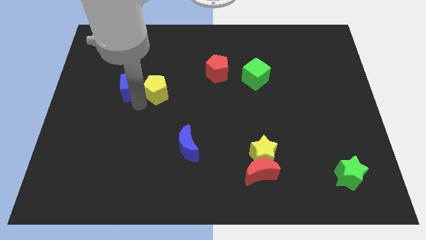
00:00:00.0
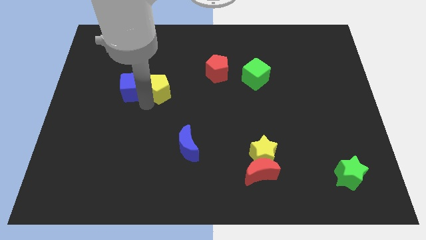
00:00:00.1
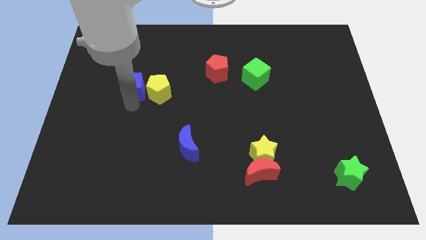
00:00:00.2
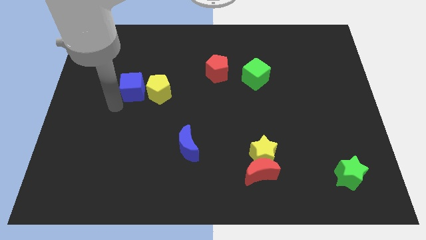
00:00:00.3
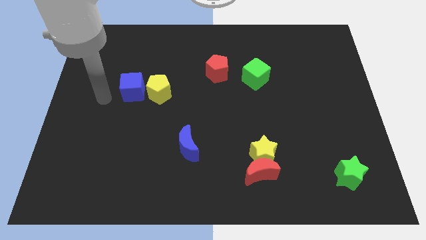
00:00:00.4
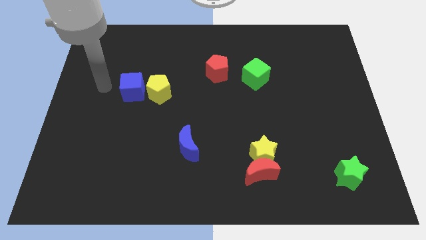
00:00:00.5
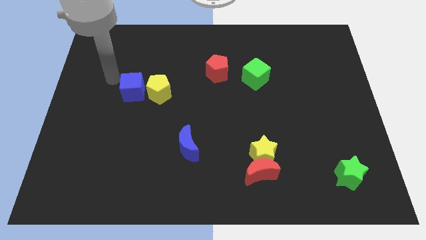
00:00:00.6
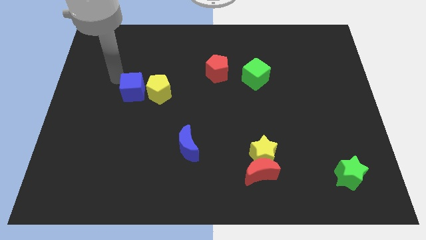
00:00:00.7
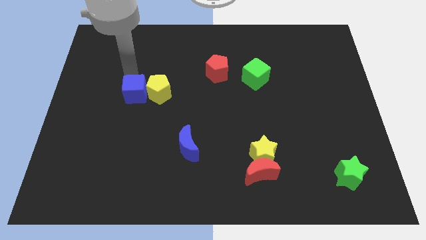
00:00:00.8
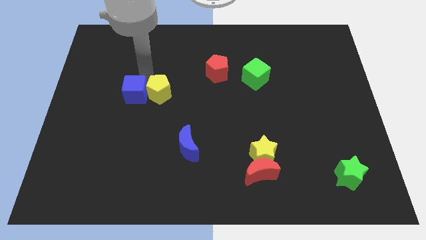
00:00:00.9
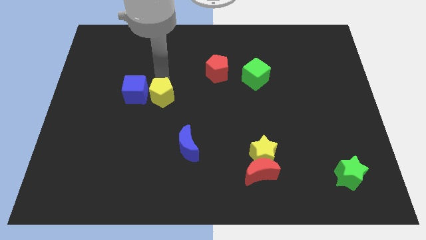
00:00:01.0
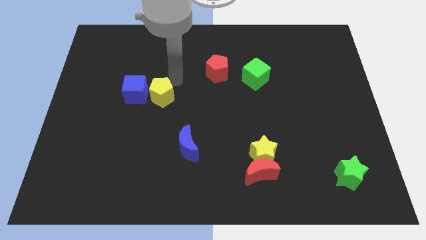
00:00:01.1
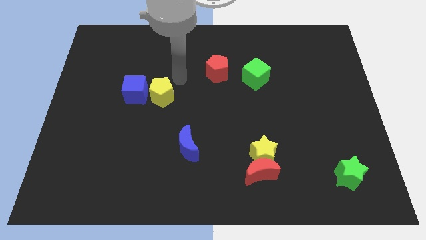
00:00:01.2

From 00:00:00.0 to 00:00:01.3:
slightly move the cube down towards the bottom center

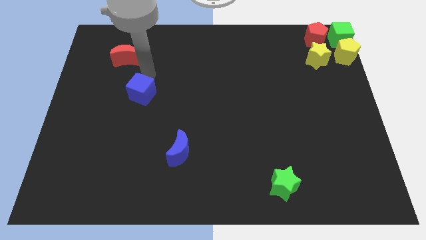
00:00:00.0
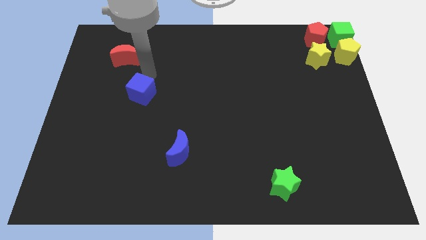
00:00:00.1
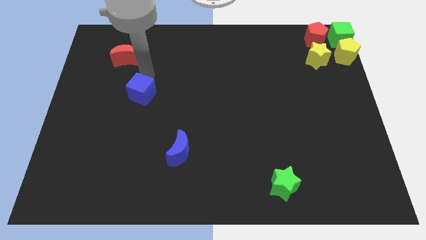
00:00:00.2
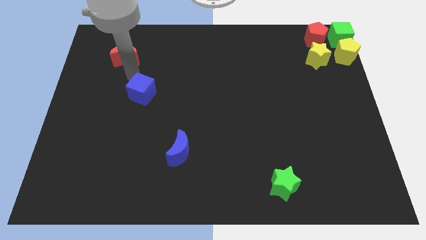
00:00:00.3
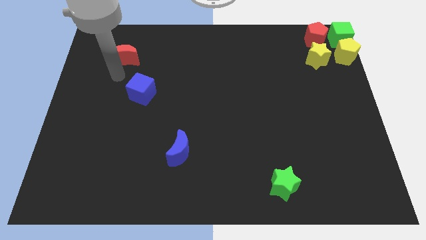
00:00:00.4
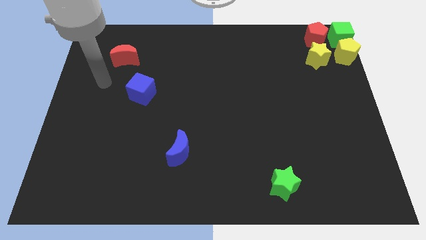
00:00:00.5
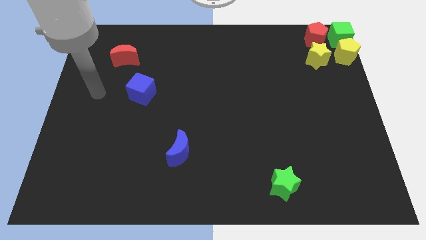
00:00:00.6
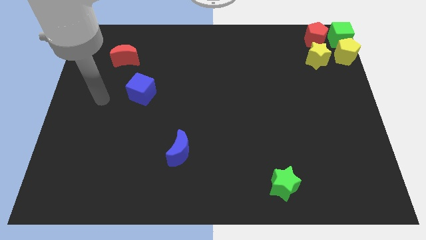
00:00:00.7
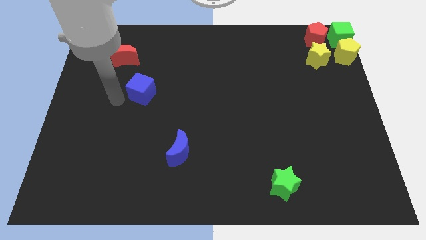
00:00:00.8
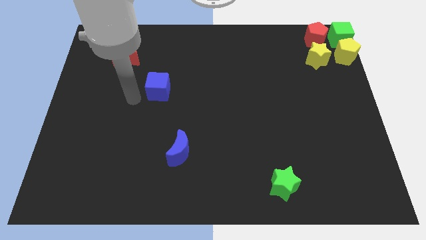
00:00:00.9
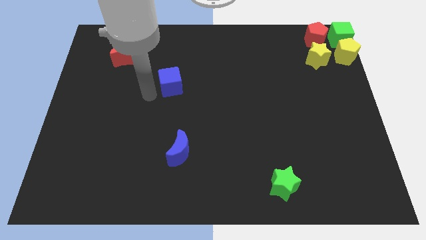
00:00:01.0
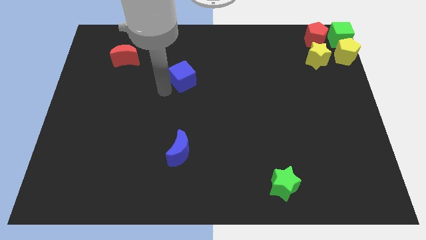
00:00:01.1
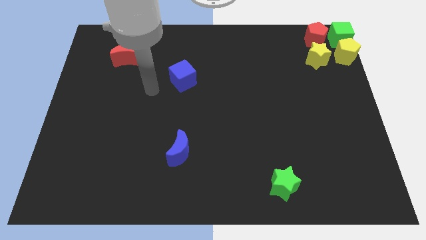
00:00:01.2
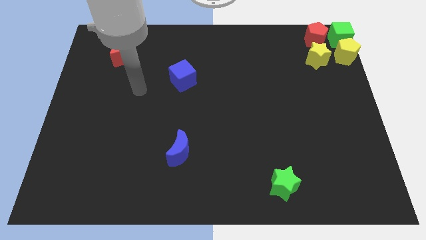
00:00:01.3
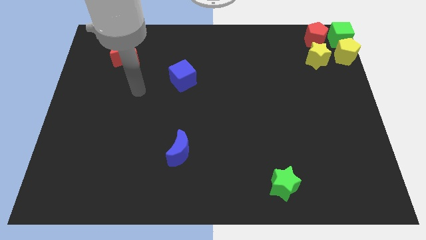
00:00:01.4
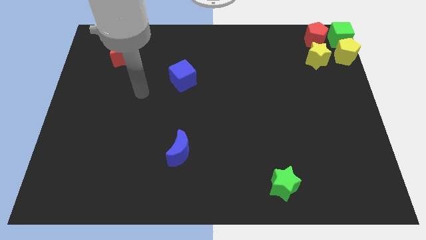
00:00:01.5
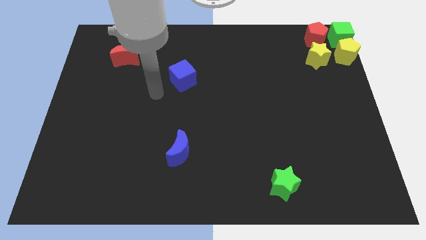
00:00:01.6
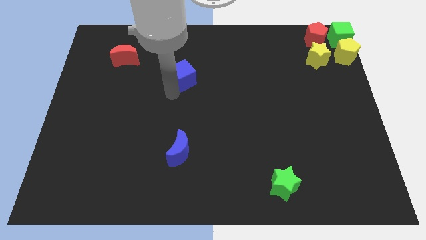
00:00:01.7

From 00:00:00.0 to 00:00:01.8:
move the blue cube slightly up

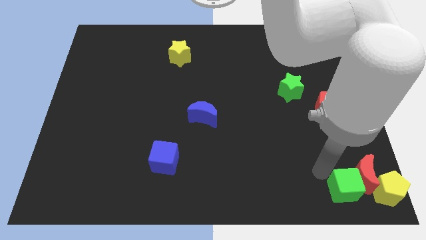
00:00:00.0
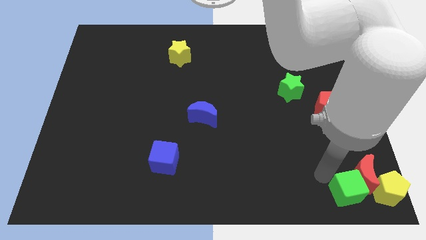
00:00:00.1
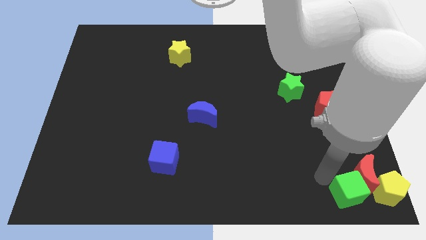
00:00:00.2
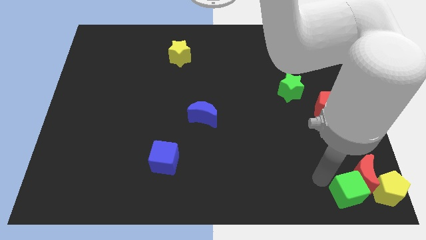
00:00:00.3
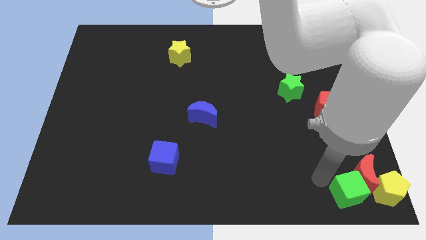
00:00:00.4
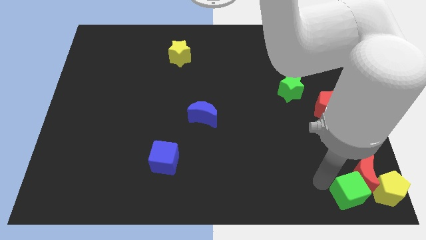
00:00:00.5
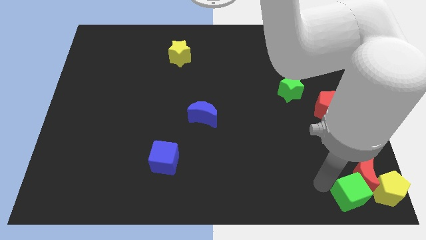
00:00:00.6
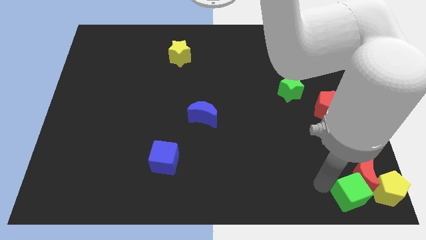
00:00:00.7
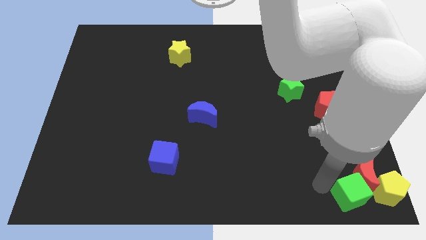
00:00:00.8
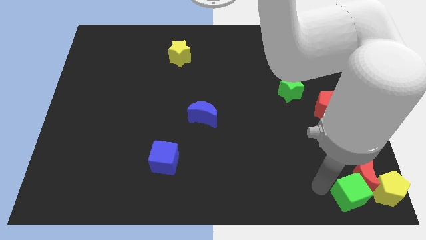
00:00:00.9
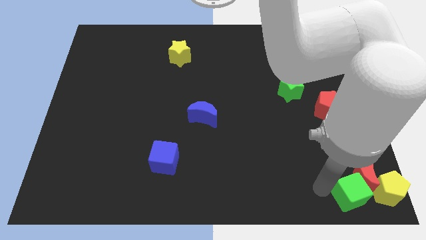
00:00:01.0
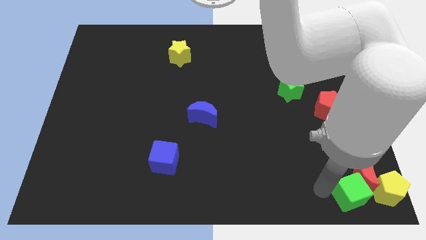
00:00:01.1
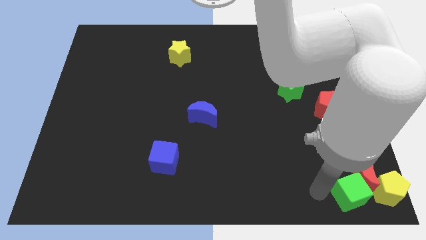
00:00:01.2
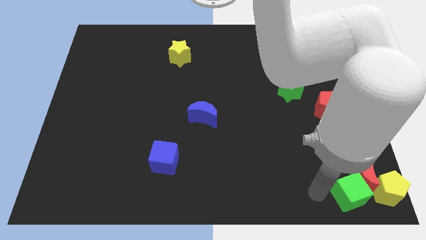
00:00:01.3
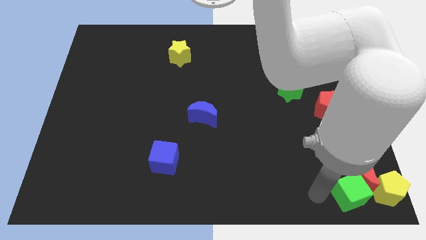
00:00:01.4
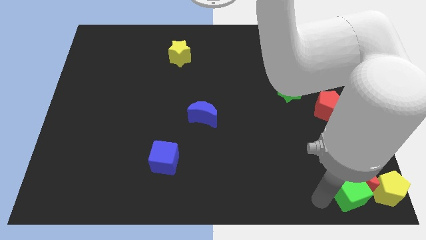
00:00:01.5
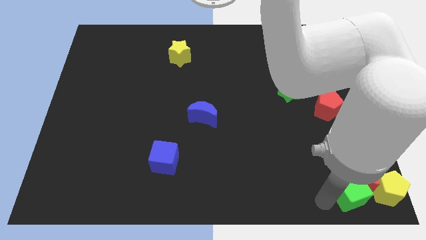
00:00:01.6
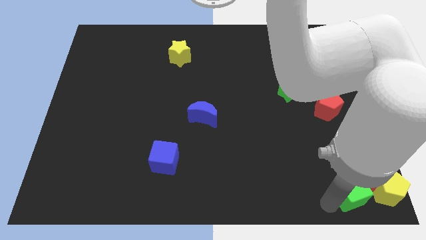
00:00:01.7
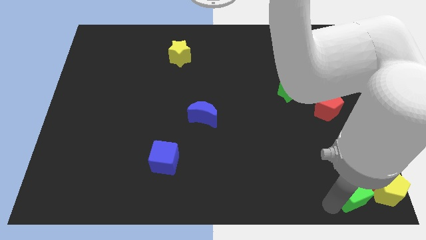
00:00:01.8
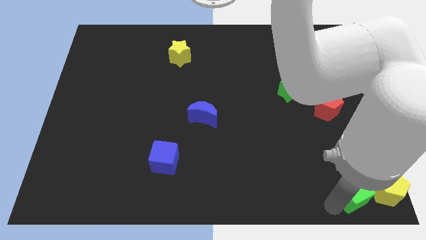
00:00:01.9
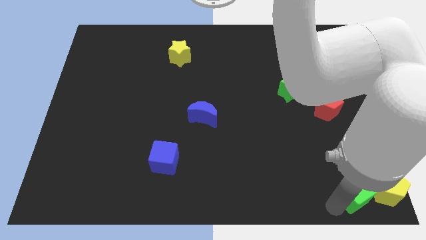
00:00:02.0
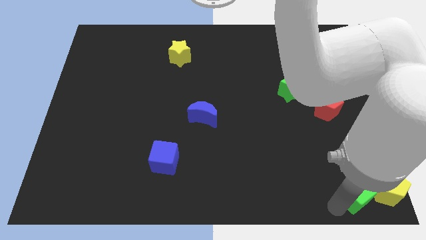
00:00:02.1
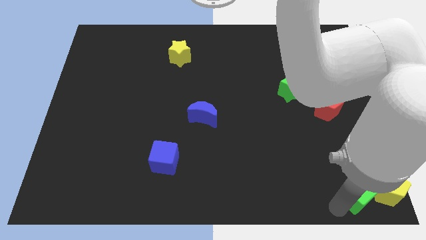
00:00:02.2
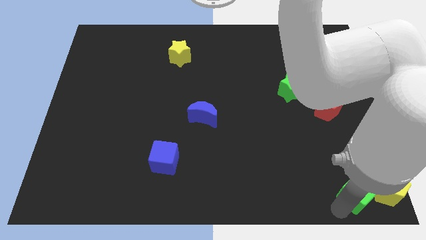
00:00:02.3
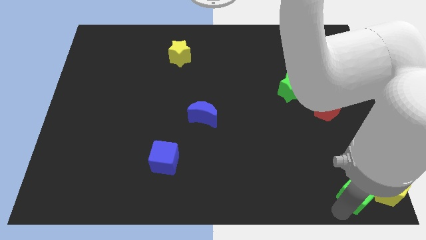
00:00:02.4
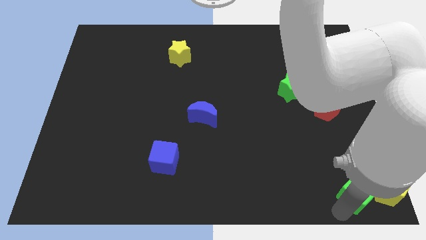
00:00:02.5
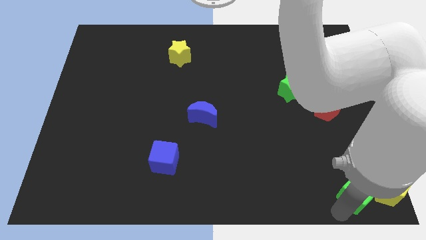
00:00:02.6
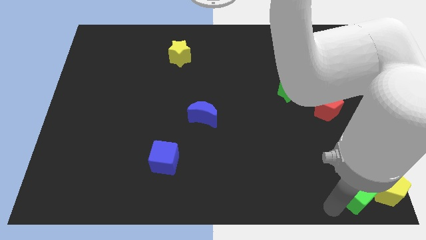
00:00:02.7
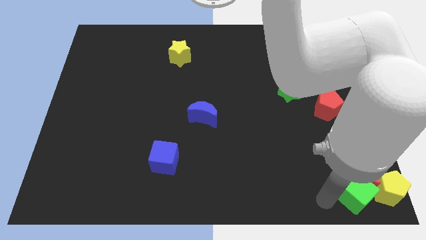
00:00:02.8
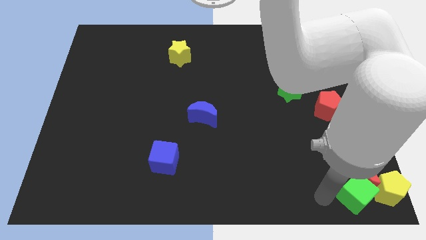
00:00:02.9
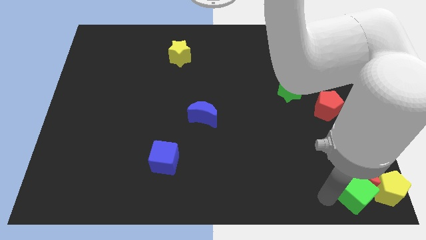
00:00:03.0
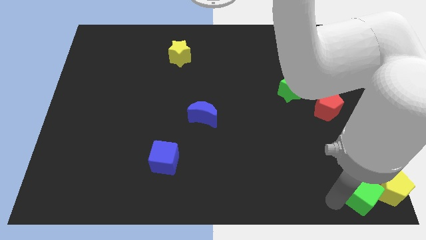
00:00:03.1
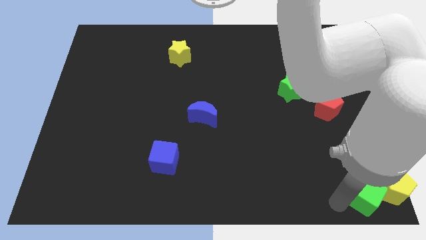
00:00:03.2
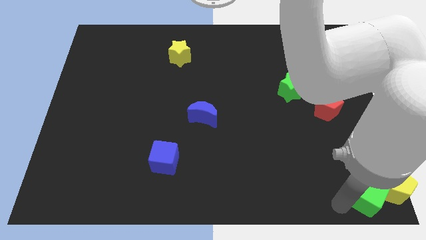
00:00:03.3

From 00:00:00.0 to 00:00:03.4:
push the green cube into the red crescent

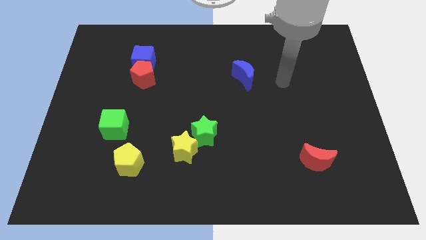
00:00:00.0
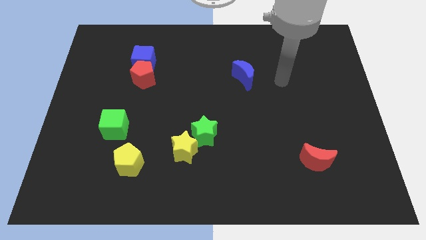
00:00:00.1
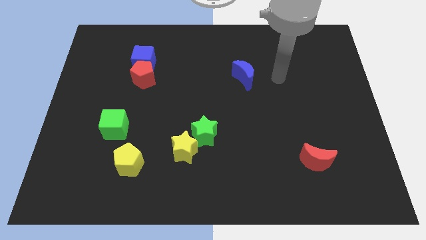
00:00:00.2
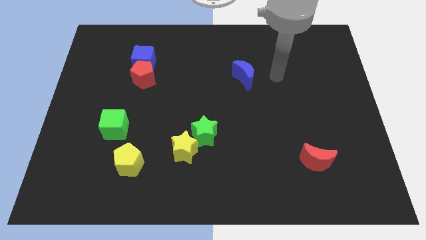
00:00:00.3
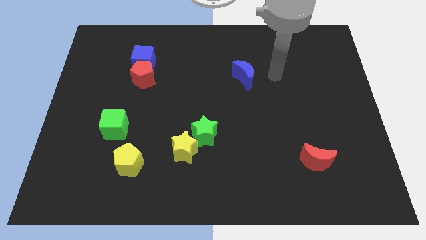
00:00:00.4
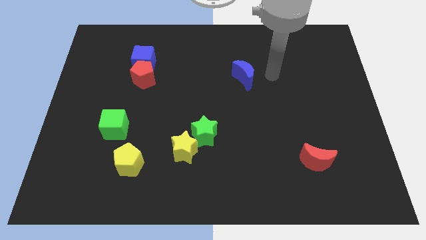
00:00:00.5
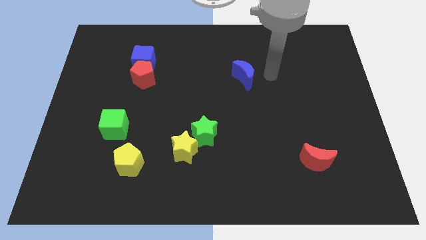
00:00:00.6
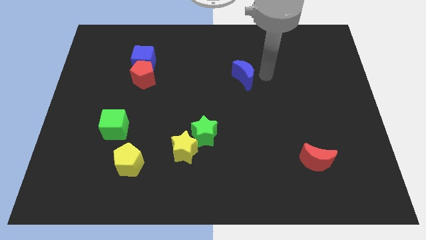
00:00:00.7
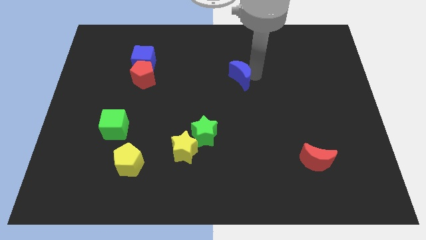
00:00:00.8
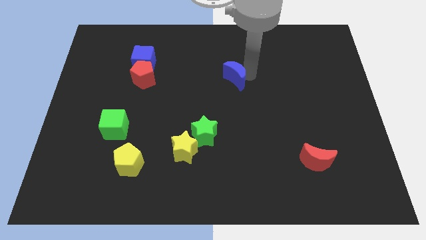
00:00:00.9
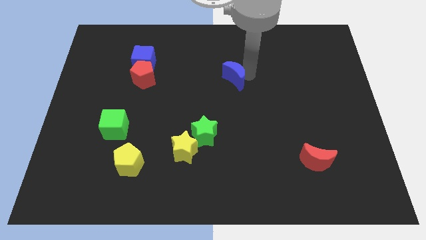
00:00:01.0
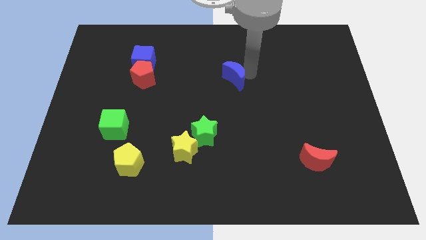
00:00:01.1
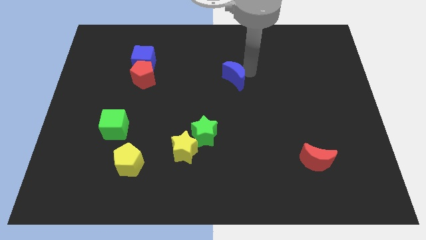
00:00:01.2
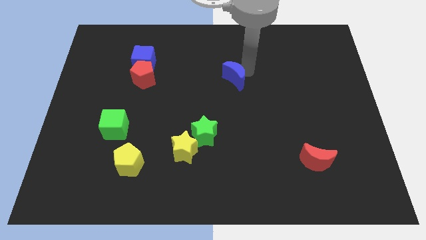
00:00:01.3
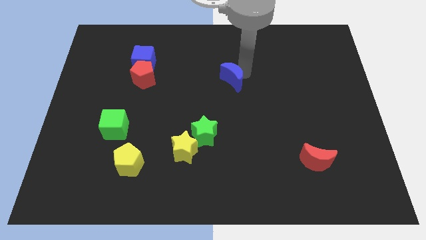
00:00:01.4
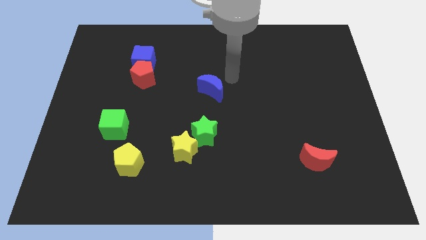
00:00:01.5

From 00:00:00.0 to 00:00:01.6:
push blue moon to the center

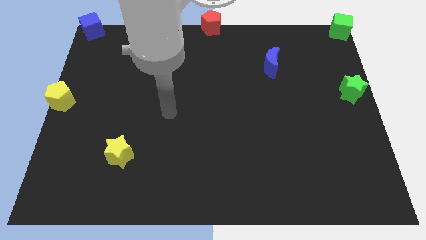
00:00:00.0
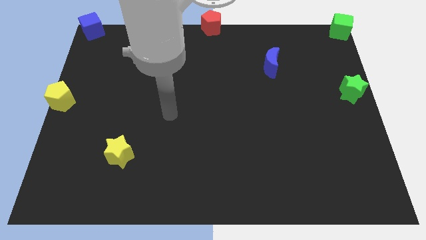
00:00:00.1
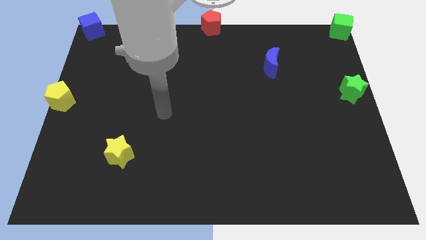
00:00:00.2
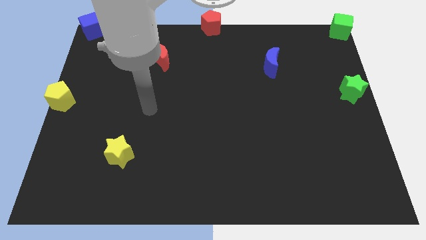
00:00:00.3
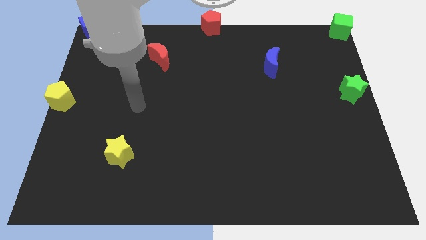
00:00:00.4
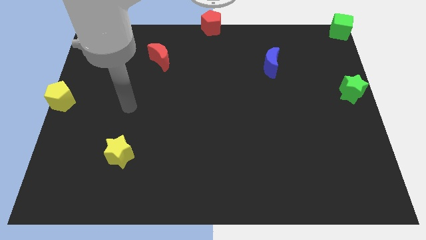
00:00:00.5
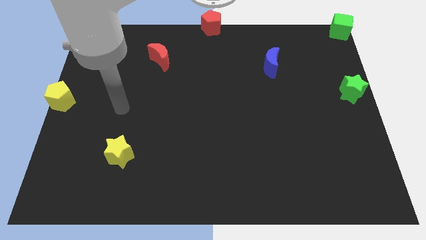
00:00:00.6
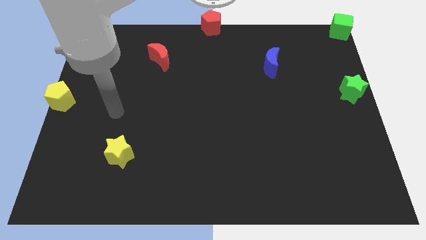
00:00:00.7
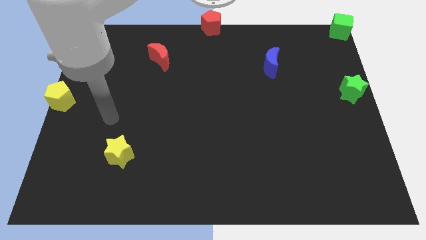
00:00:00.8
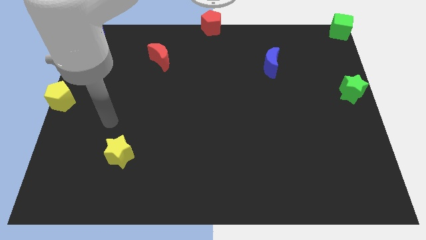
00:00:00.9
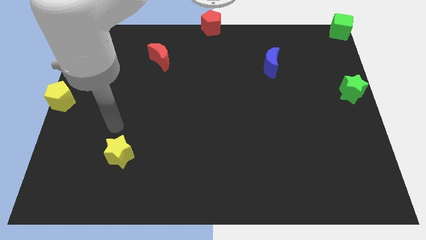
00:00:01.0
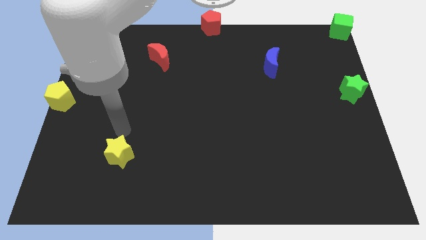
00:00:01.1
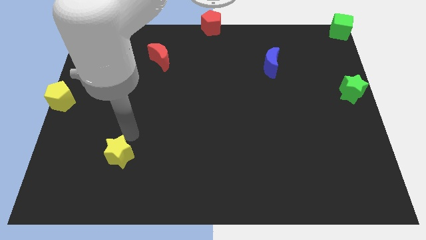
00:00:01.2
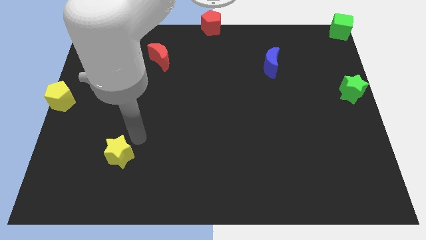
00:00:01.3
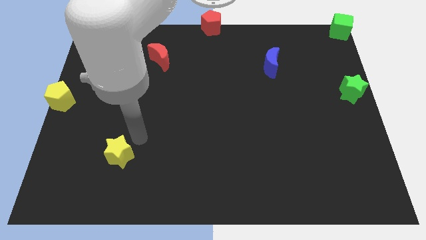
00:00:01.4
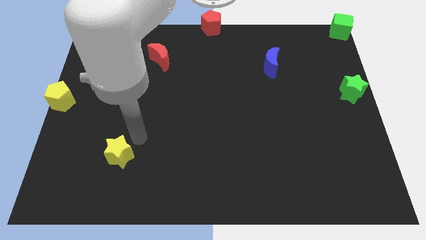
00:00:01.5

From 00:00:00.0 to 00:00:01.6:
move your arm to the top of the yellow star
